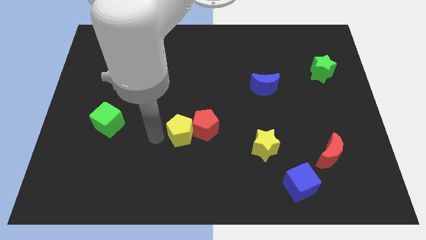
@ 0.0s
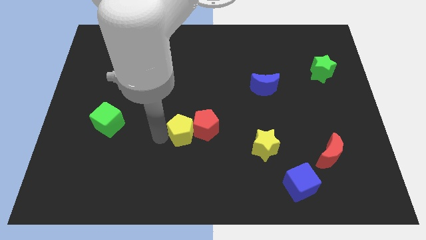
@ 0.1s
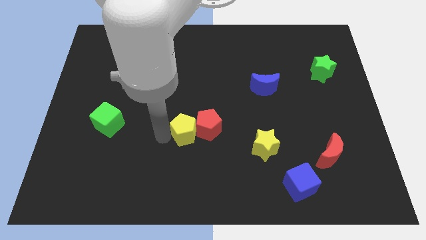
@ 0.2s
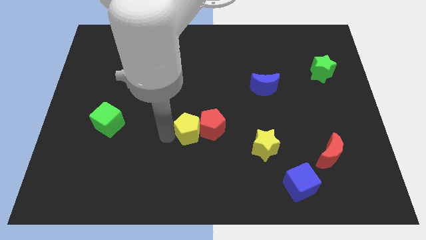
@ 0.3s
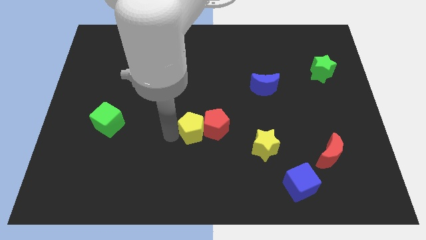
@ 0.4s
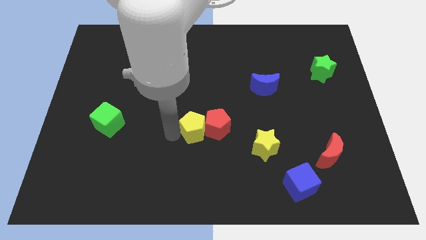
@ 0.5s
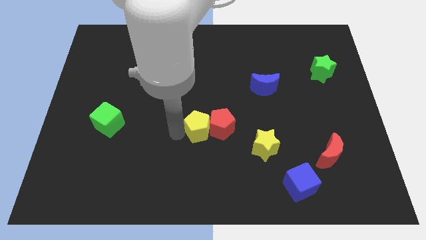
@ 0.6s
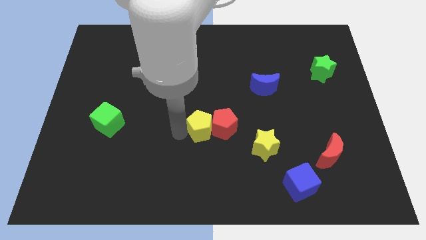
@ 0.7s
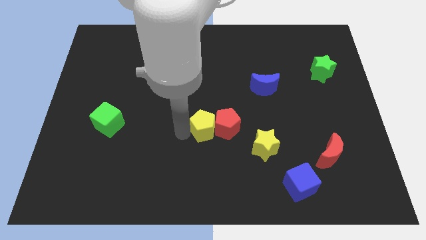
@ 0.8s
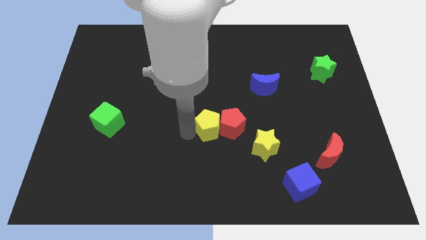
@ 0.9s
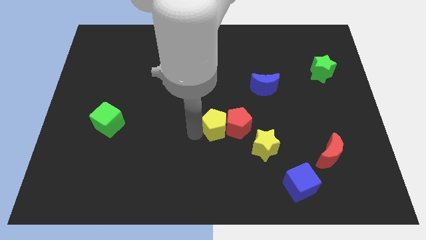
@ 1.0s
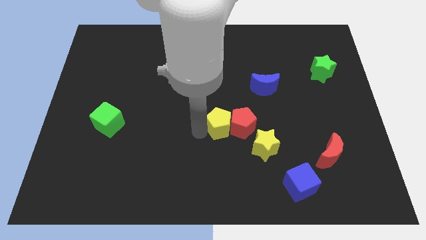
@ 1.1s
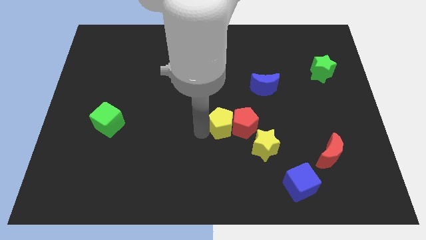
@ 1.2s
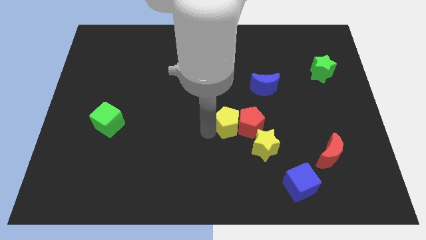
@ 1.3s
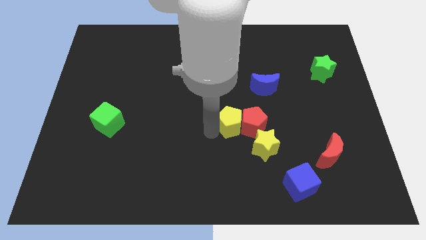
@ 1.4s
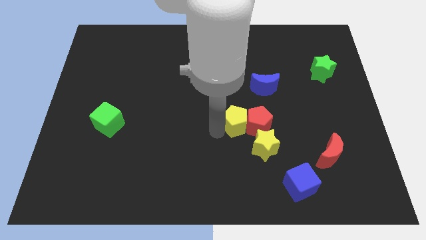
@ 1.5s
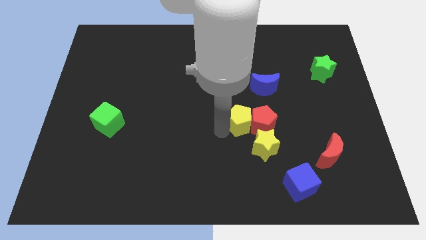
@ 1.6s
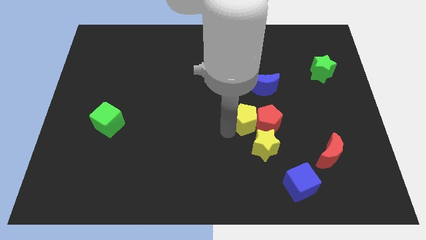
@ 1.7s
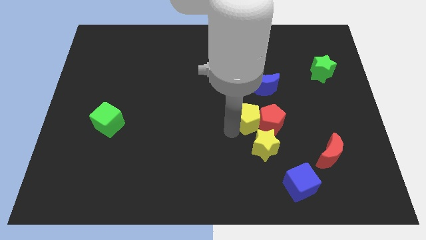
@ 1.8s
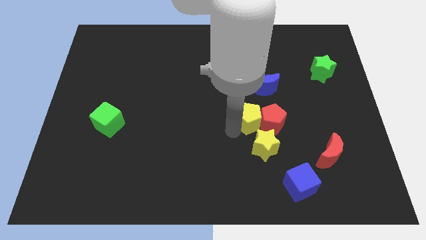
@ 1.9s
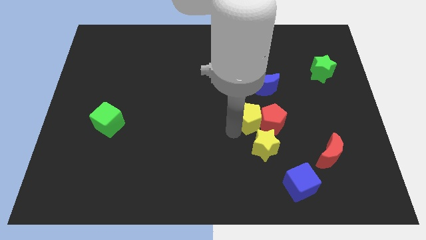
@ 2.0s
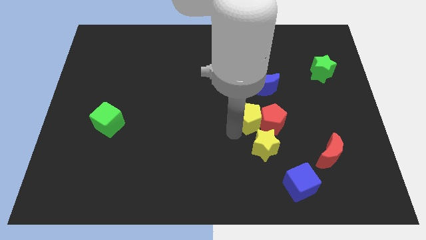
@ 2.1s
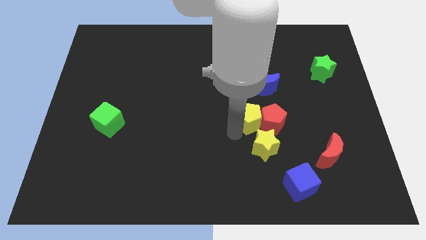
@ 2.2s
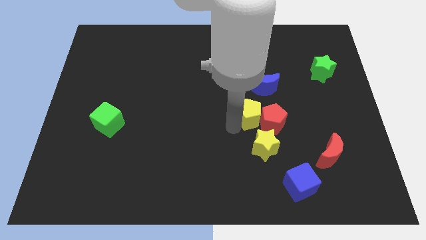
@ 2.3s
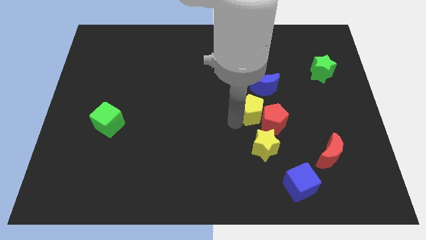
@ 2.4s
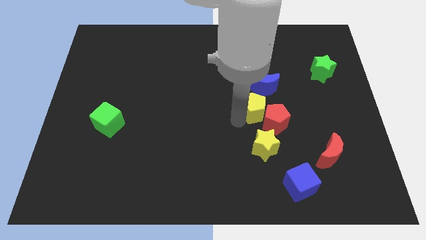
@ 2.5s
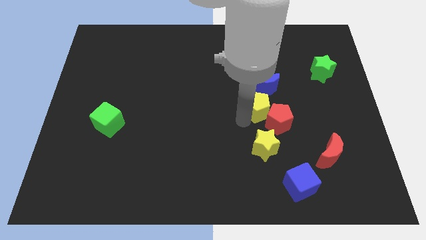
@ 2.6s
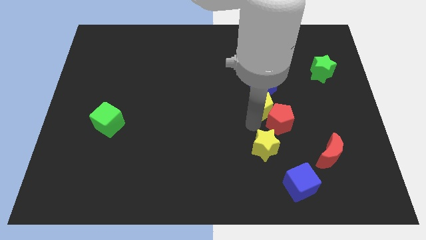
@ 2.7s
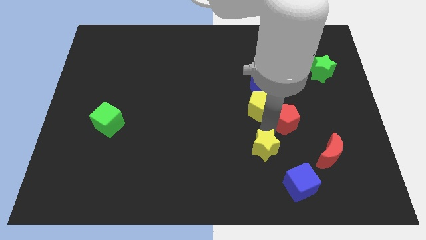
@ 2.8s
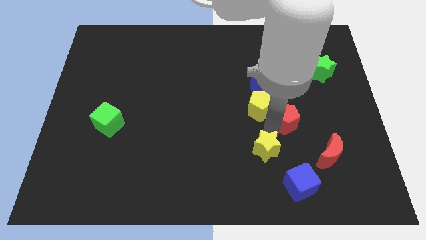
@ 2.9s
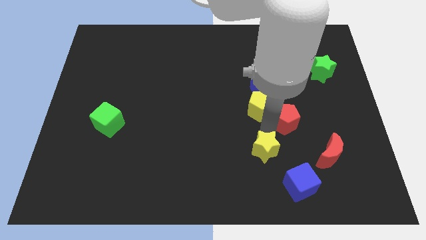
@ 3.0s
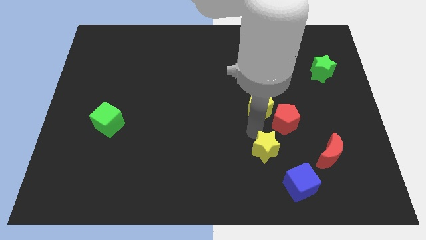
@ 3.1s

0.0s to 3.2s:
drag the yellow and the red pentagon towards the center right

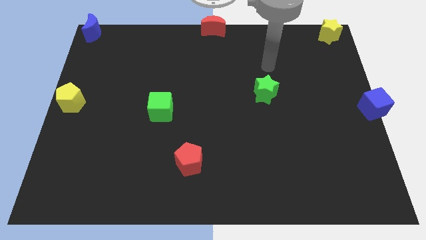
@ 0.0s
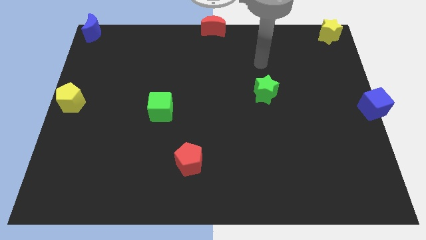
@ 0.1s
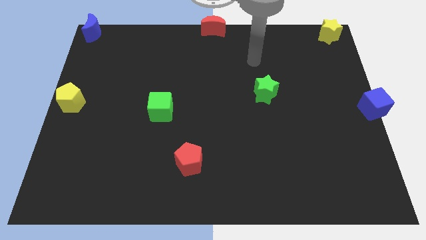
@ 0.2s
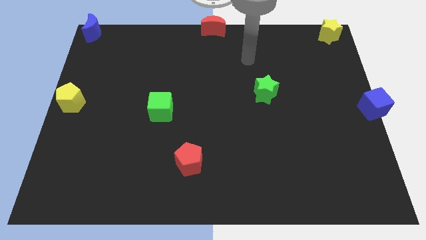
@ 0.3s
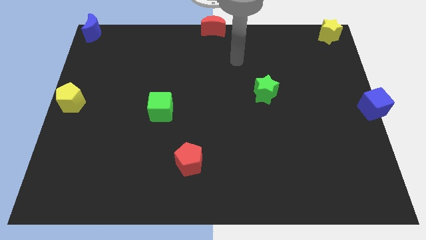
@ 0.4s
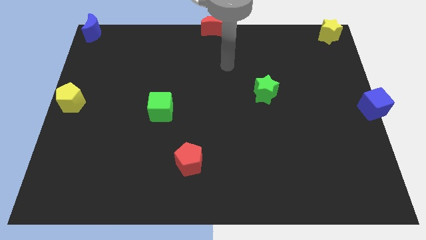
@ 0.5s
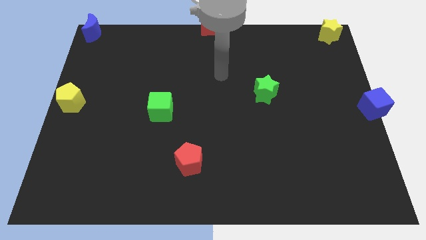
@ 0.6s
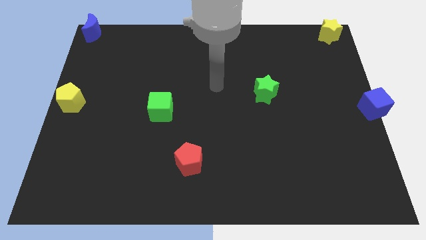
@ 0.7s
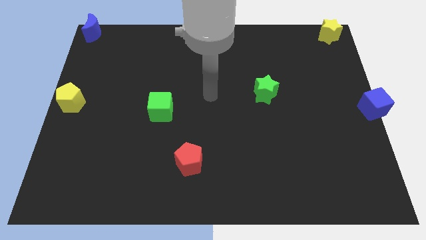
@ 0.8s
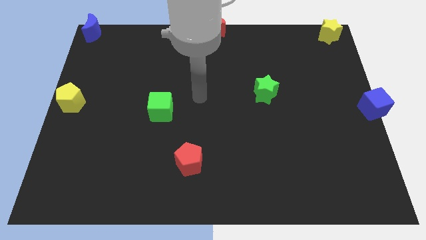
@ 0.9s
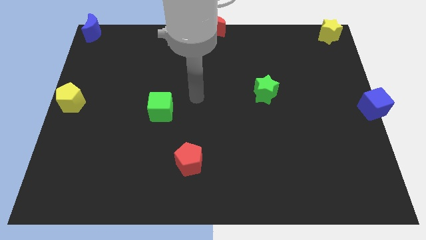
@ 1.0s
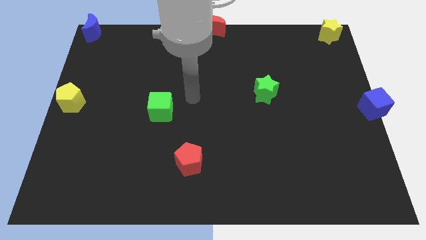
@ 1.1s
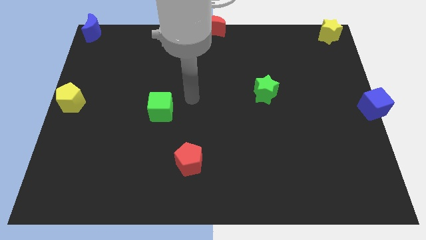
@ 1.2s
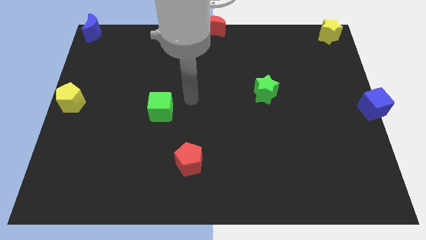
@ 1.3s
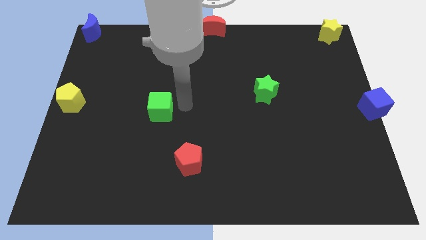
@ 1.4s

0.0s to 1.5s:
move your hand to the right of the green cube

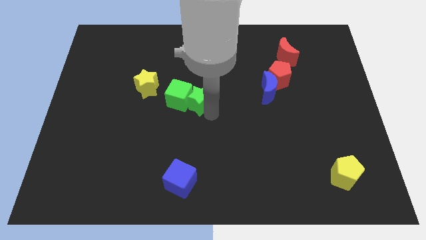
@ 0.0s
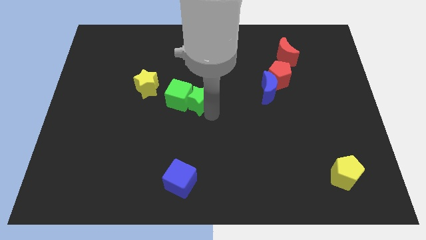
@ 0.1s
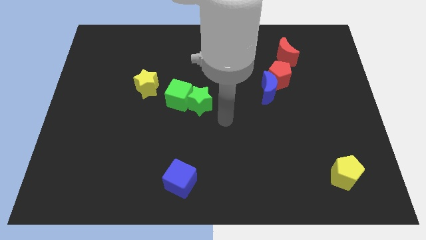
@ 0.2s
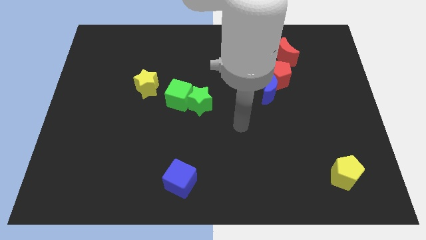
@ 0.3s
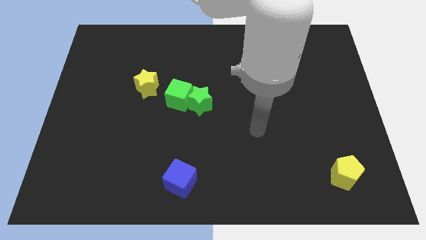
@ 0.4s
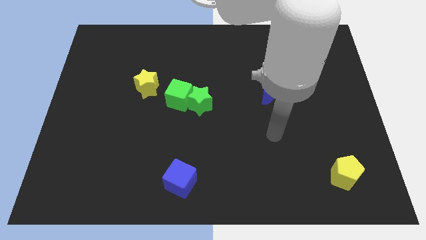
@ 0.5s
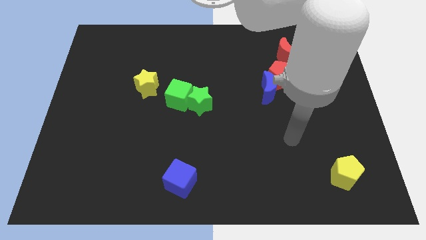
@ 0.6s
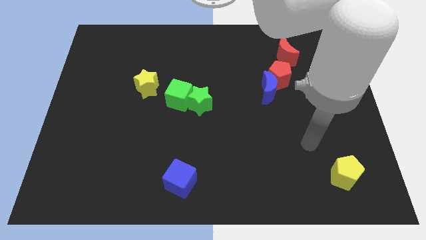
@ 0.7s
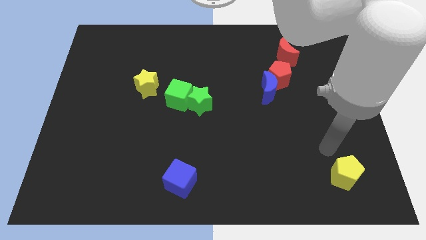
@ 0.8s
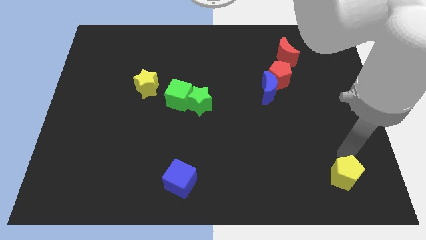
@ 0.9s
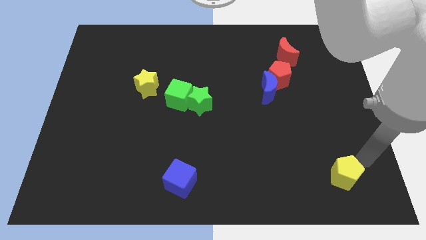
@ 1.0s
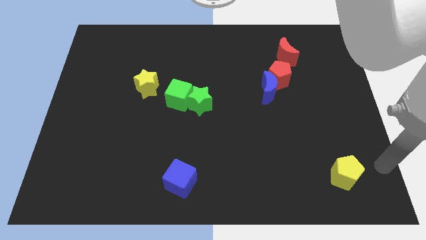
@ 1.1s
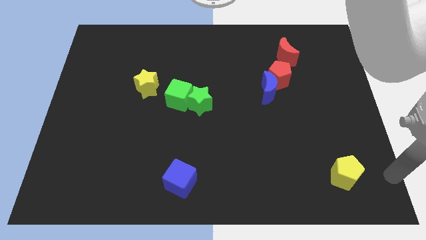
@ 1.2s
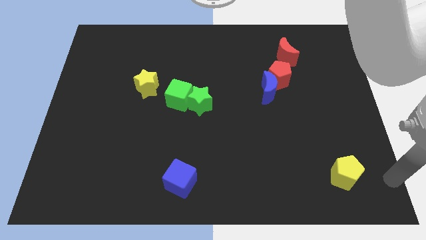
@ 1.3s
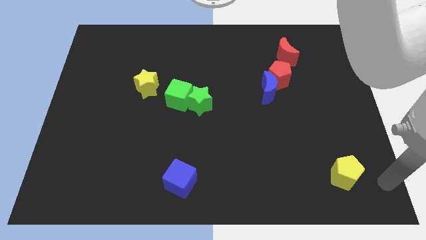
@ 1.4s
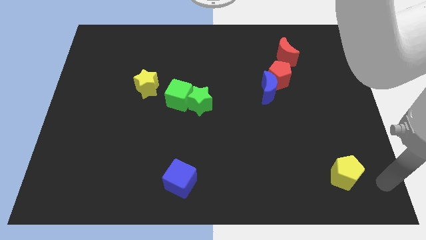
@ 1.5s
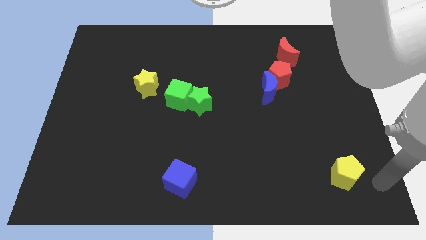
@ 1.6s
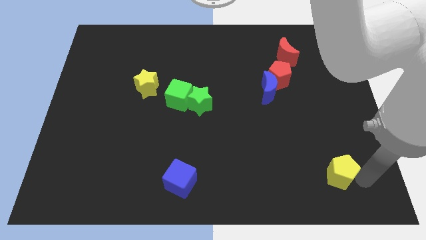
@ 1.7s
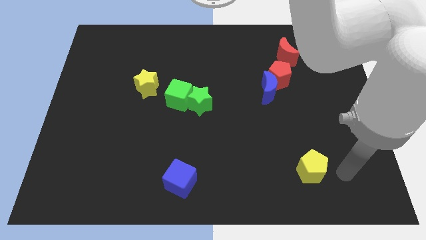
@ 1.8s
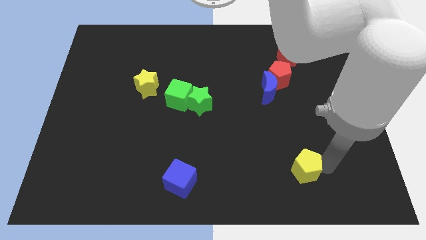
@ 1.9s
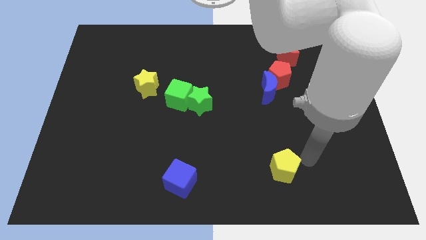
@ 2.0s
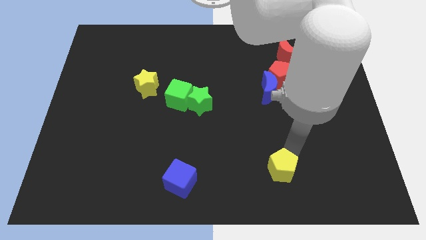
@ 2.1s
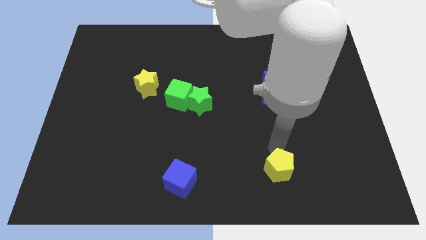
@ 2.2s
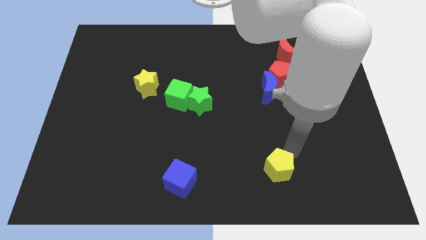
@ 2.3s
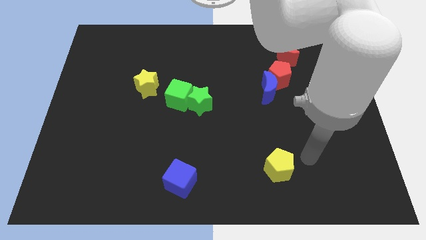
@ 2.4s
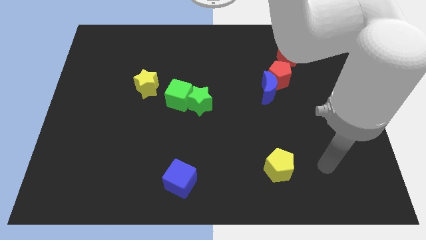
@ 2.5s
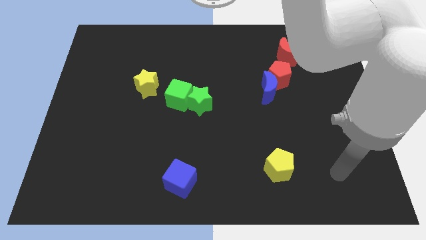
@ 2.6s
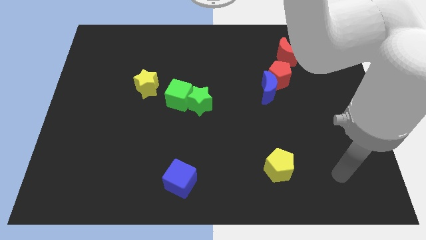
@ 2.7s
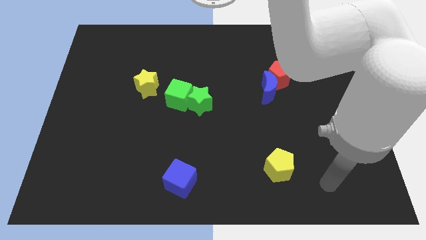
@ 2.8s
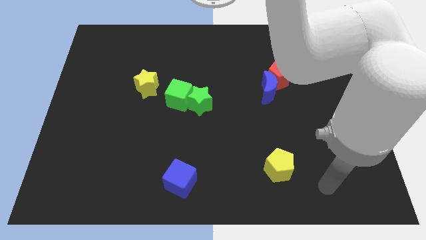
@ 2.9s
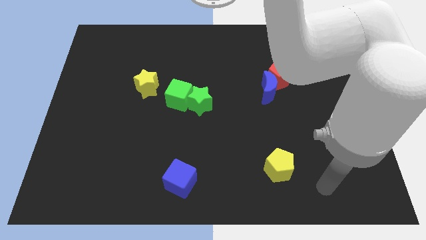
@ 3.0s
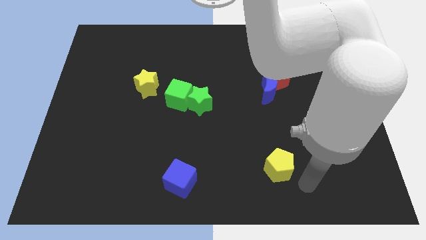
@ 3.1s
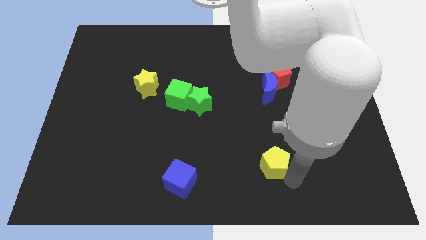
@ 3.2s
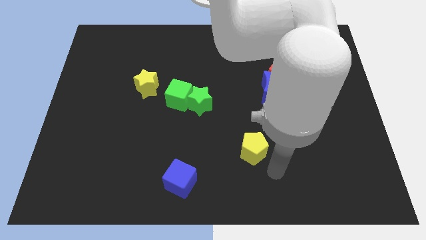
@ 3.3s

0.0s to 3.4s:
move the yellow pentagon to the bottom of the blue crescent

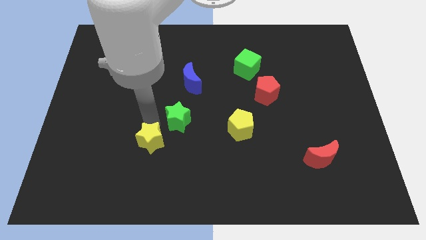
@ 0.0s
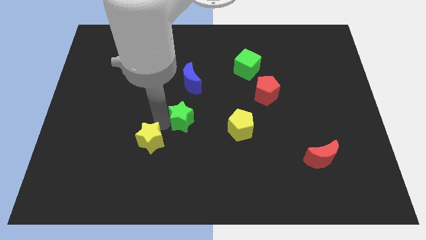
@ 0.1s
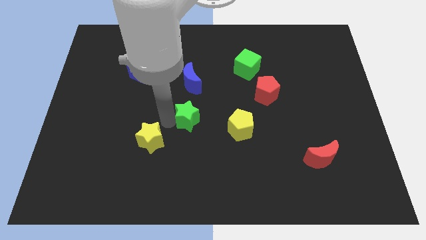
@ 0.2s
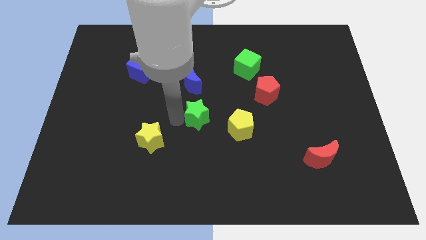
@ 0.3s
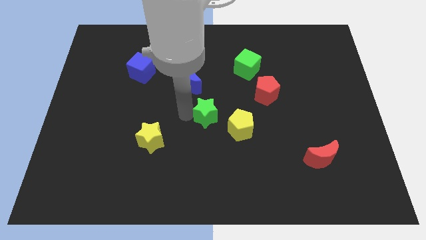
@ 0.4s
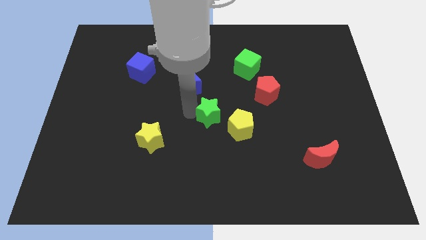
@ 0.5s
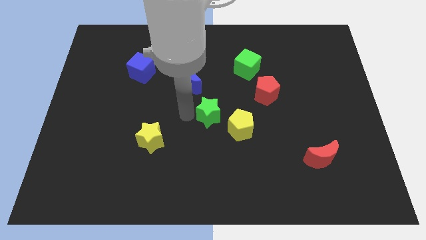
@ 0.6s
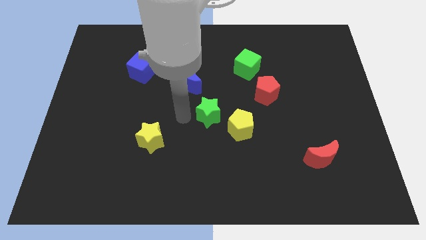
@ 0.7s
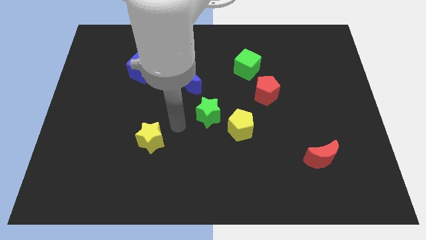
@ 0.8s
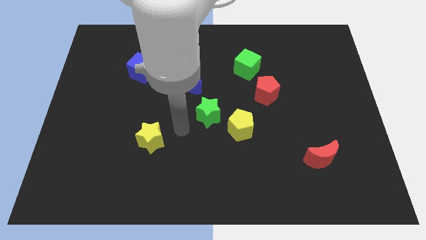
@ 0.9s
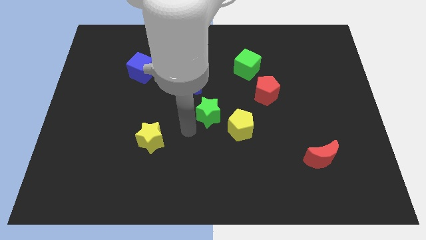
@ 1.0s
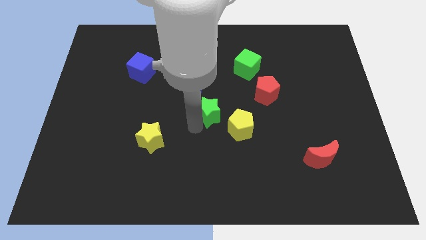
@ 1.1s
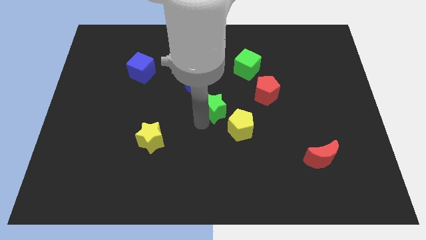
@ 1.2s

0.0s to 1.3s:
move green star left above yellow pentagon
